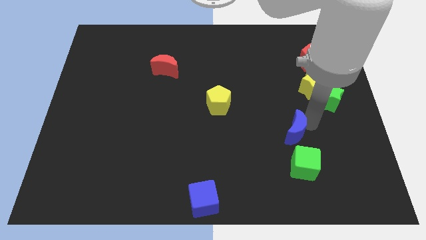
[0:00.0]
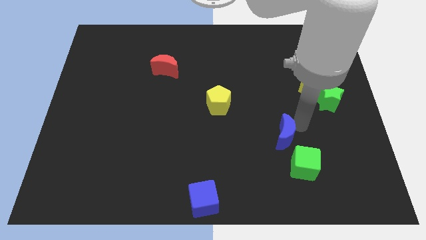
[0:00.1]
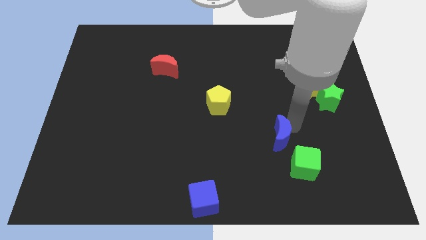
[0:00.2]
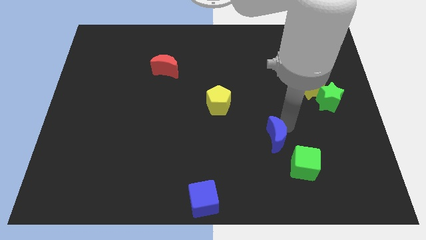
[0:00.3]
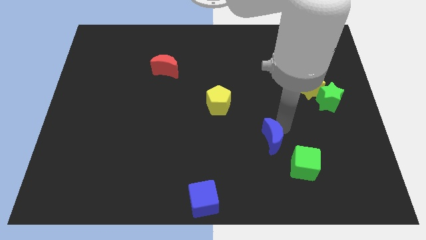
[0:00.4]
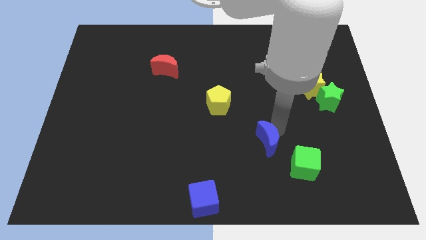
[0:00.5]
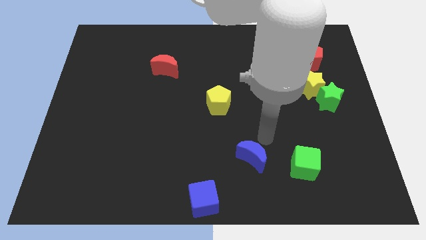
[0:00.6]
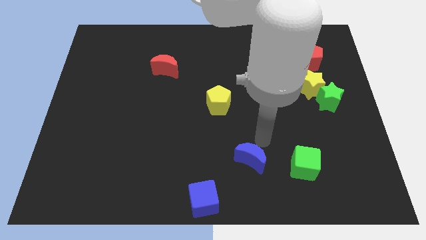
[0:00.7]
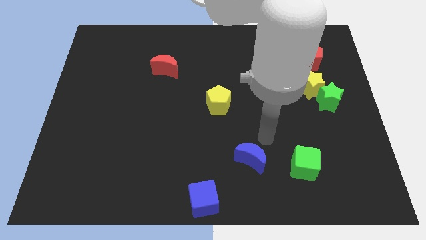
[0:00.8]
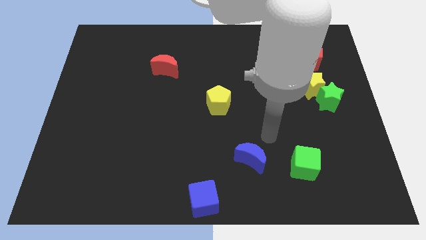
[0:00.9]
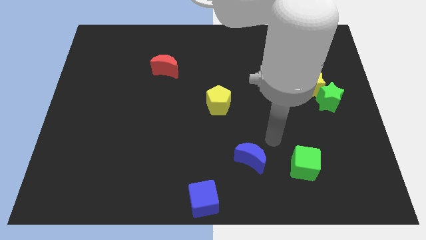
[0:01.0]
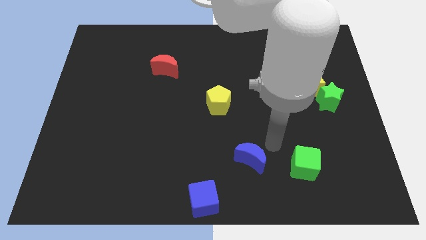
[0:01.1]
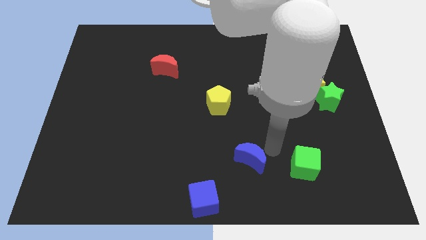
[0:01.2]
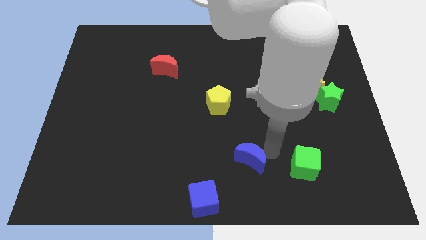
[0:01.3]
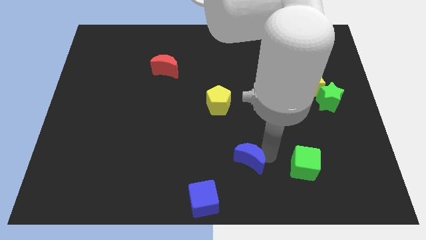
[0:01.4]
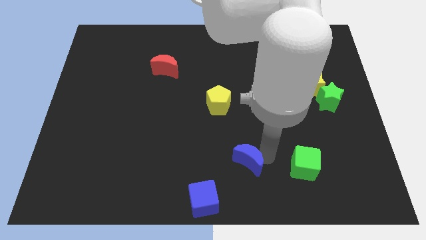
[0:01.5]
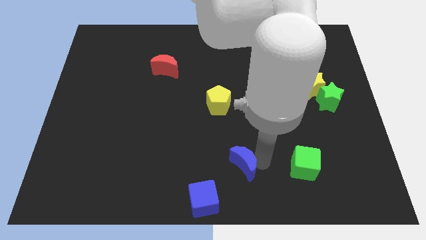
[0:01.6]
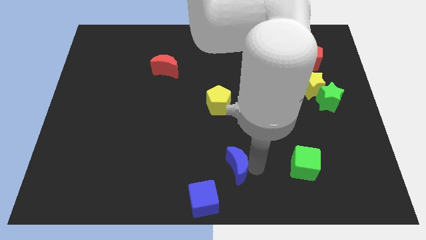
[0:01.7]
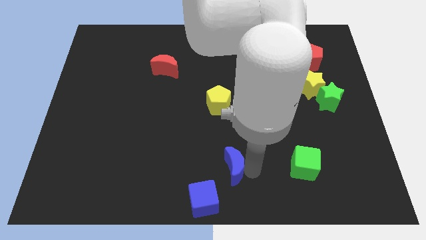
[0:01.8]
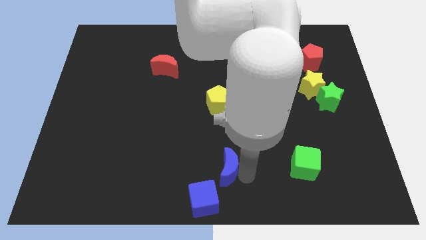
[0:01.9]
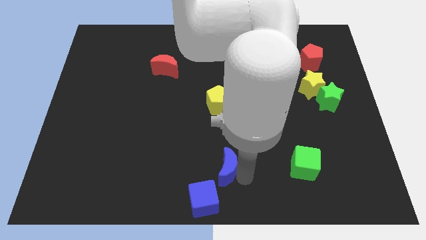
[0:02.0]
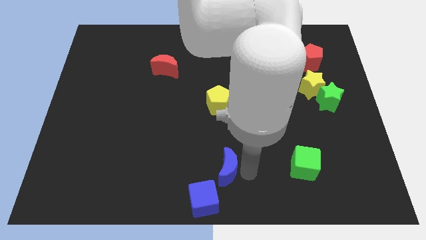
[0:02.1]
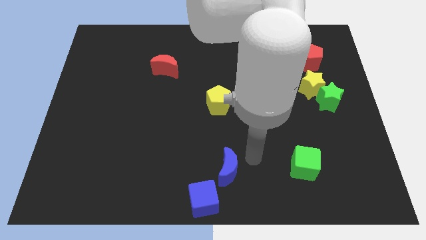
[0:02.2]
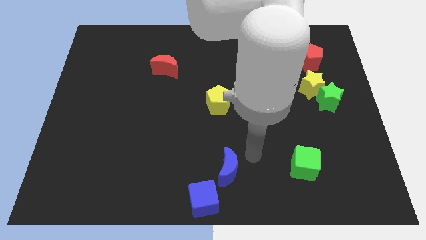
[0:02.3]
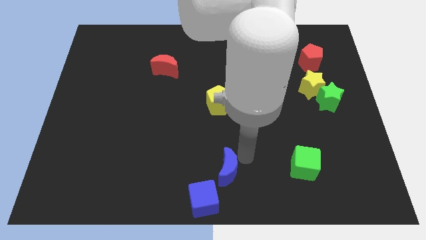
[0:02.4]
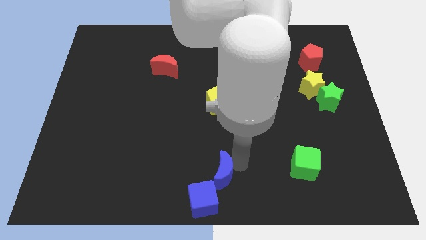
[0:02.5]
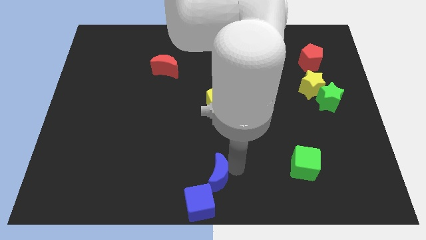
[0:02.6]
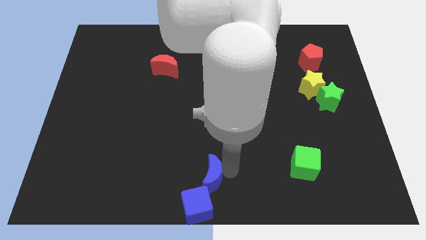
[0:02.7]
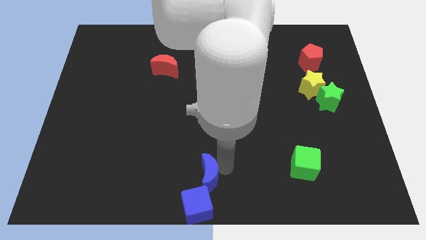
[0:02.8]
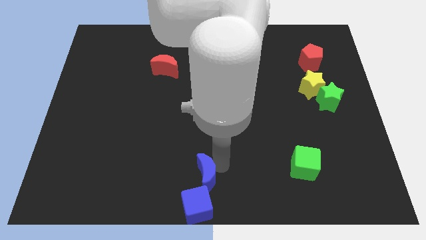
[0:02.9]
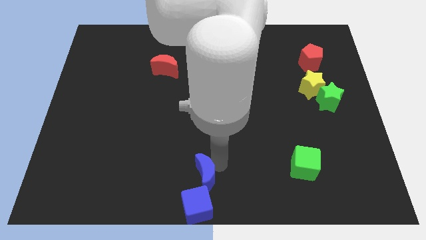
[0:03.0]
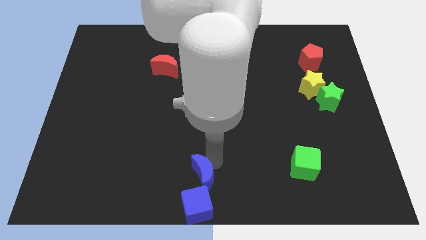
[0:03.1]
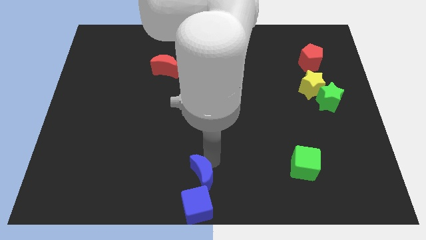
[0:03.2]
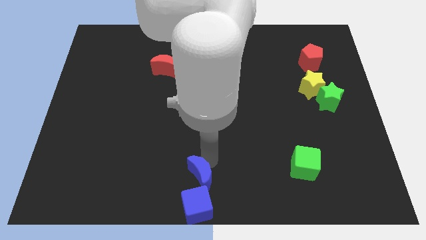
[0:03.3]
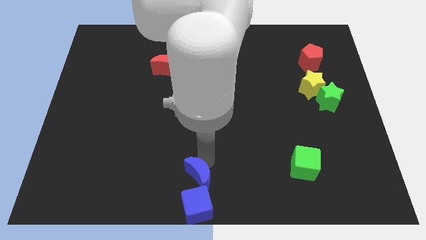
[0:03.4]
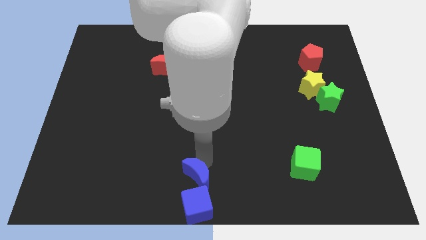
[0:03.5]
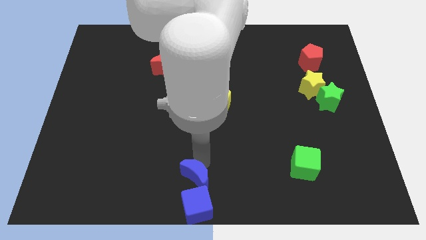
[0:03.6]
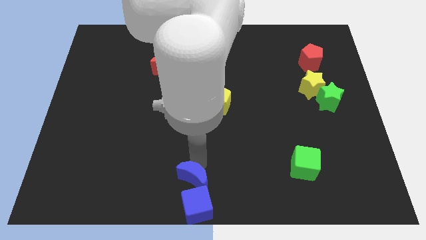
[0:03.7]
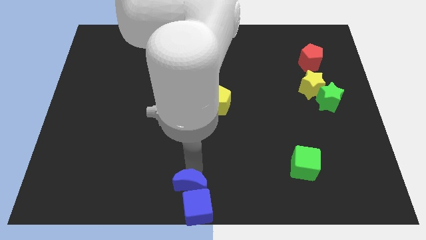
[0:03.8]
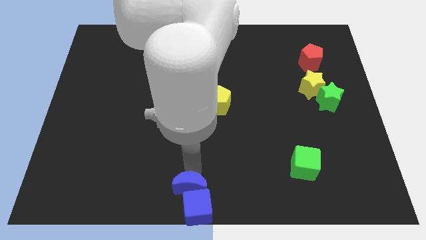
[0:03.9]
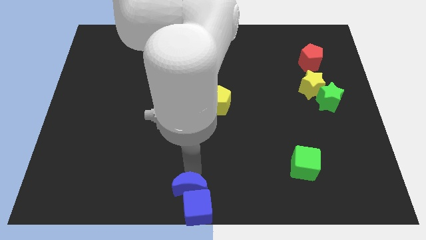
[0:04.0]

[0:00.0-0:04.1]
push blue moon into blue cube

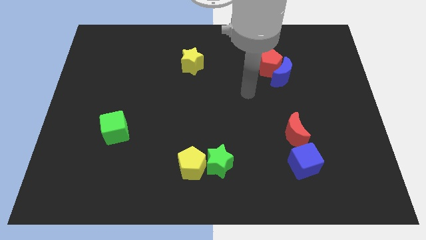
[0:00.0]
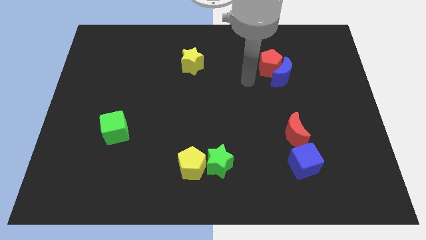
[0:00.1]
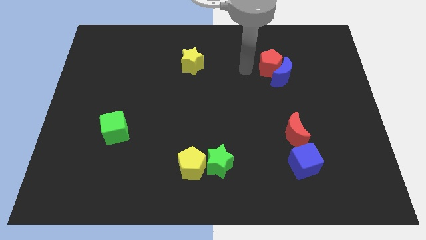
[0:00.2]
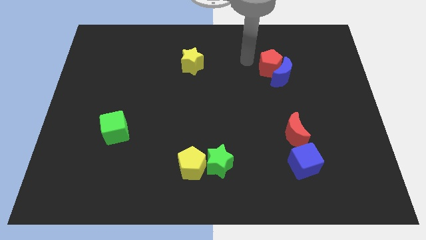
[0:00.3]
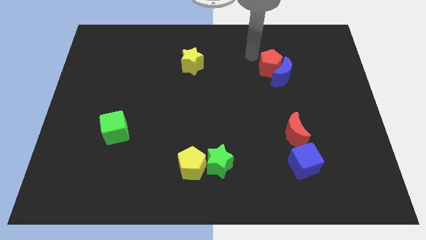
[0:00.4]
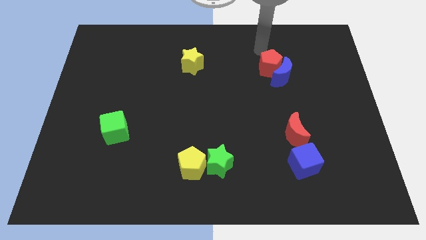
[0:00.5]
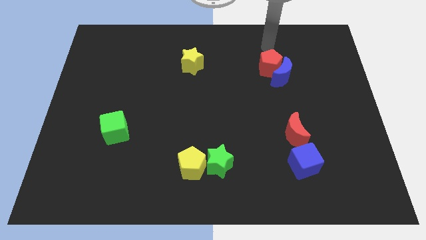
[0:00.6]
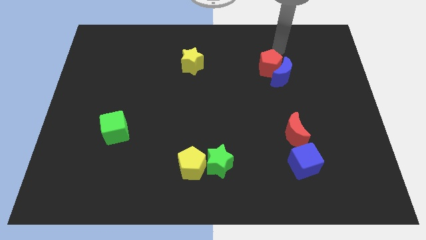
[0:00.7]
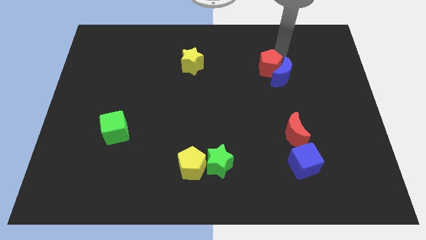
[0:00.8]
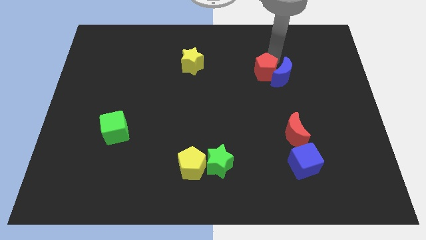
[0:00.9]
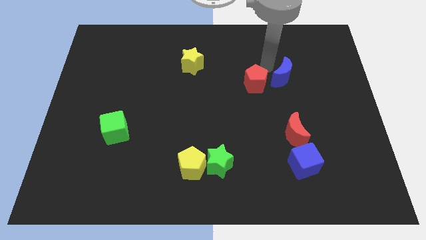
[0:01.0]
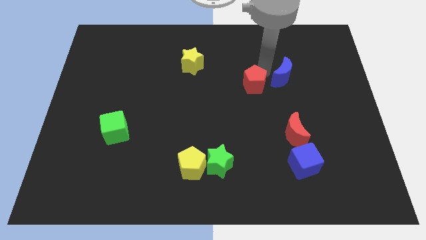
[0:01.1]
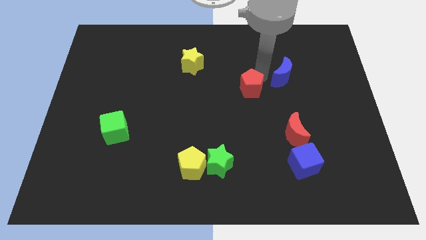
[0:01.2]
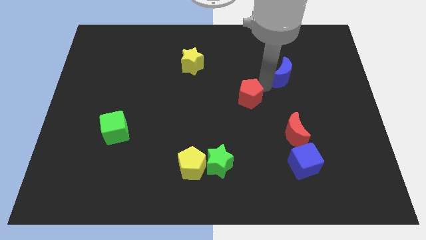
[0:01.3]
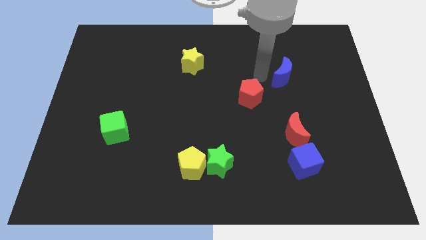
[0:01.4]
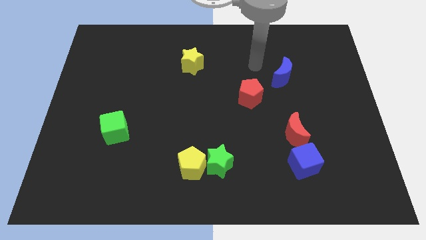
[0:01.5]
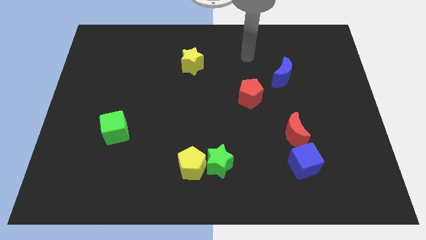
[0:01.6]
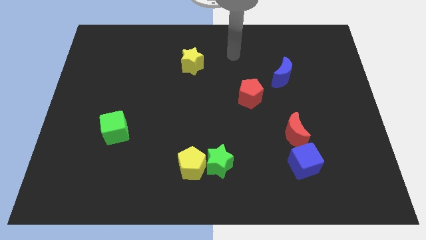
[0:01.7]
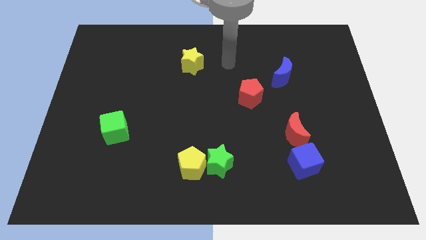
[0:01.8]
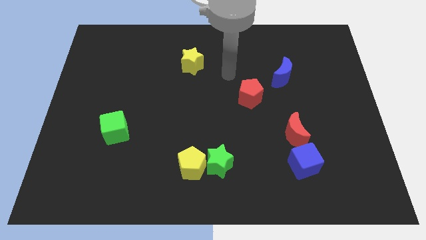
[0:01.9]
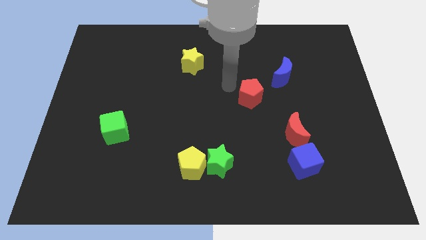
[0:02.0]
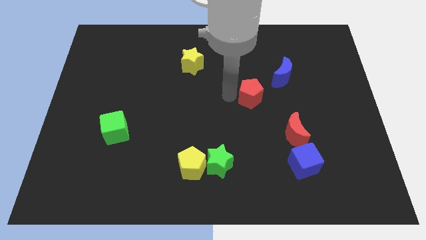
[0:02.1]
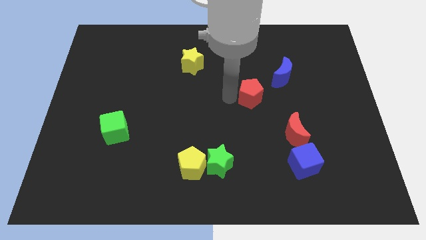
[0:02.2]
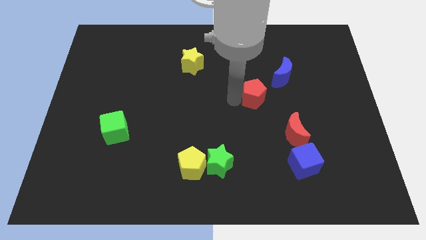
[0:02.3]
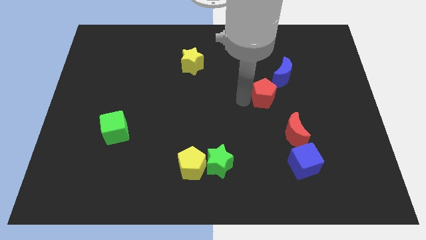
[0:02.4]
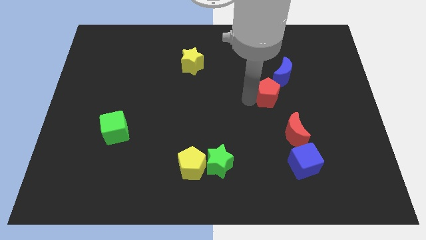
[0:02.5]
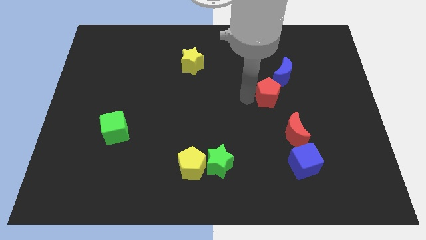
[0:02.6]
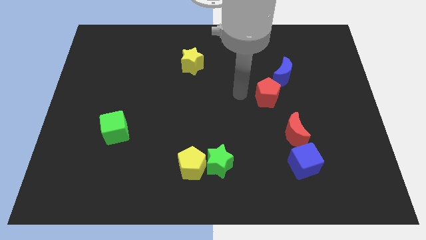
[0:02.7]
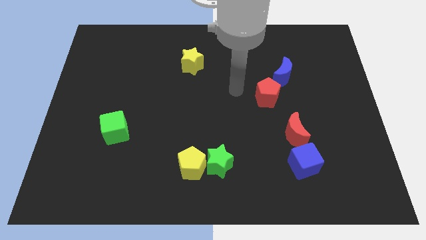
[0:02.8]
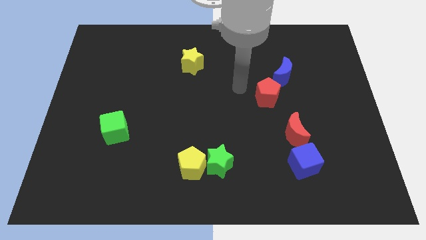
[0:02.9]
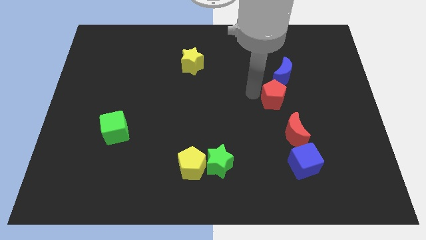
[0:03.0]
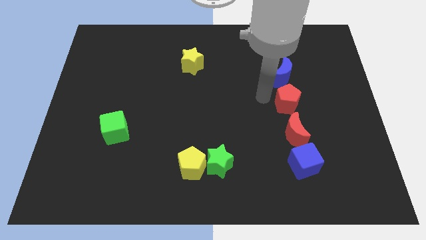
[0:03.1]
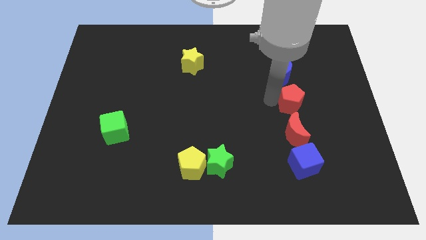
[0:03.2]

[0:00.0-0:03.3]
place the red pentagon in between the red moon and the blue crescent

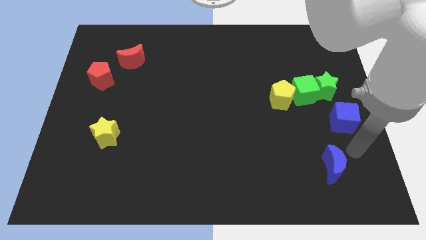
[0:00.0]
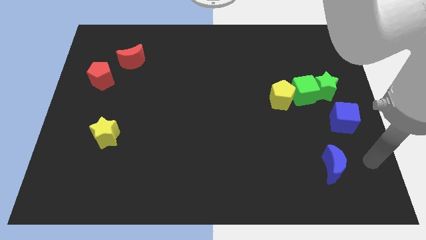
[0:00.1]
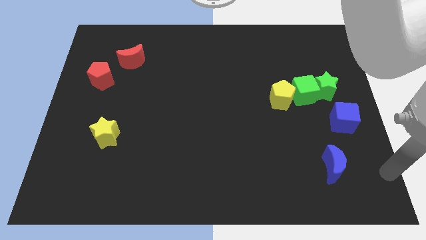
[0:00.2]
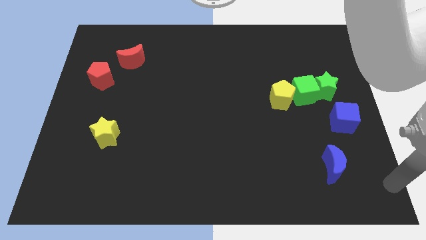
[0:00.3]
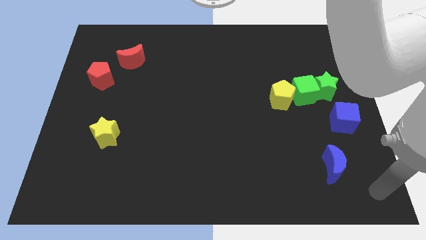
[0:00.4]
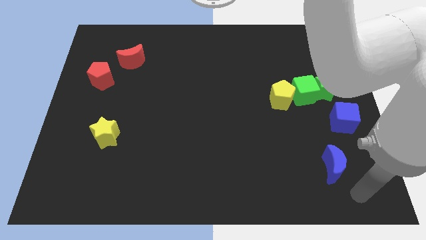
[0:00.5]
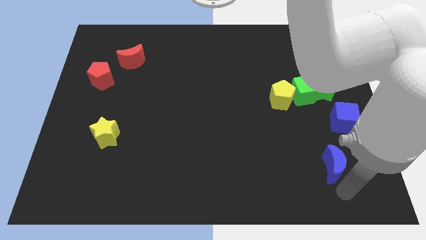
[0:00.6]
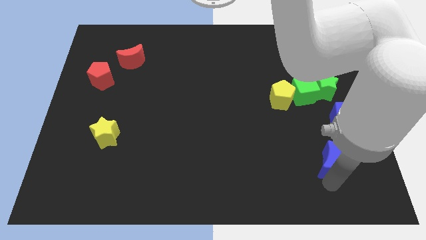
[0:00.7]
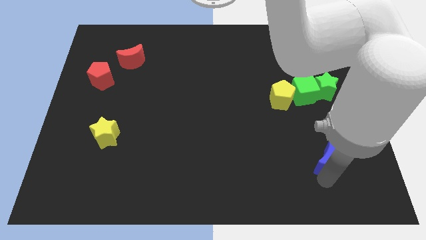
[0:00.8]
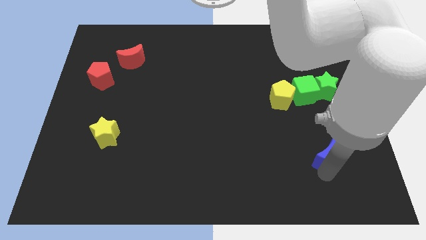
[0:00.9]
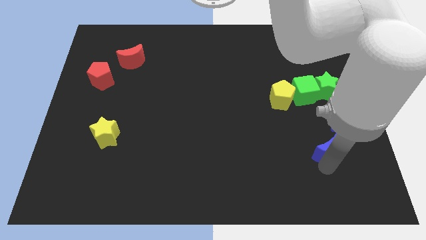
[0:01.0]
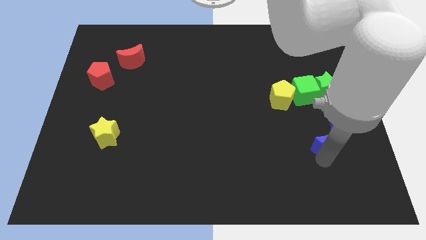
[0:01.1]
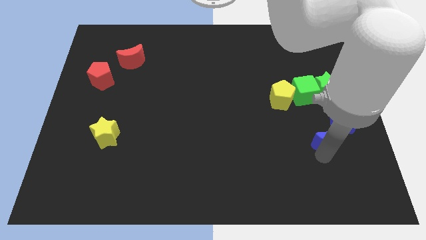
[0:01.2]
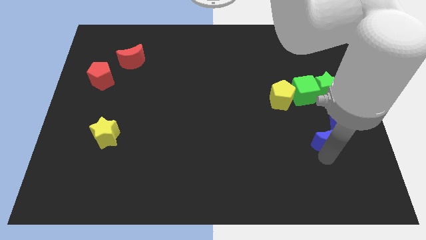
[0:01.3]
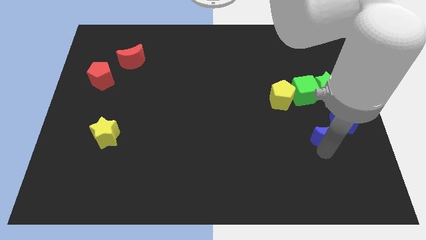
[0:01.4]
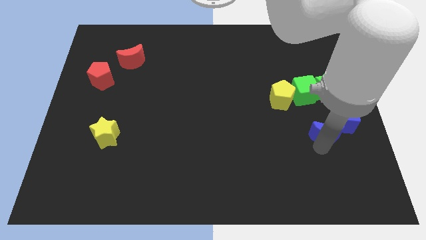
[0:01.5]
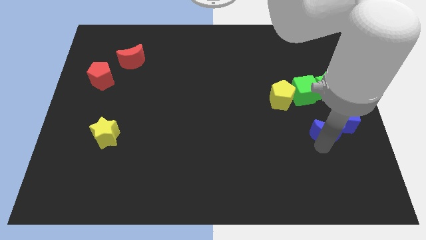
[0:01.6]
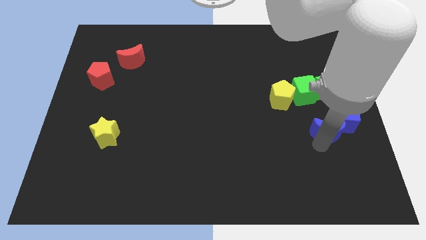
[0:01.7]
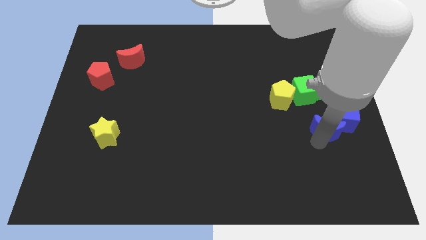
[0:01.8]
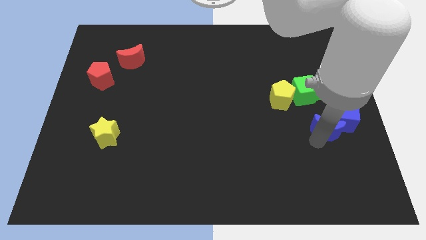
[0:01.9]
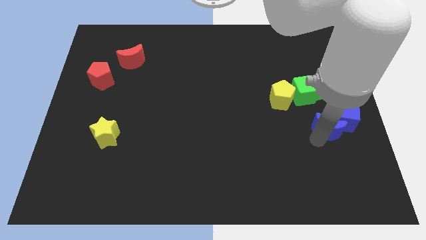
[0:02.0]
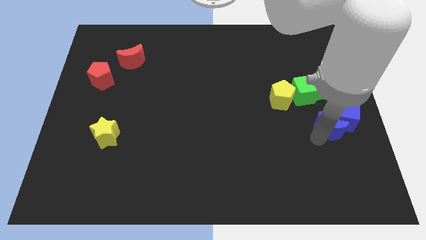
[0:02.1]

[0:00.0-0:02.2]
push the blue moon into the blue cube
